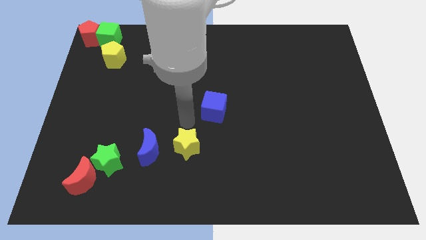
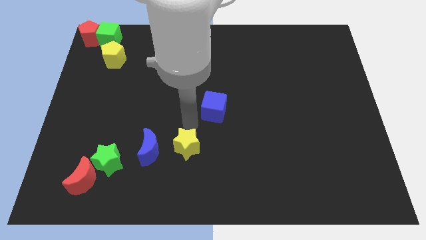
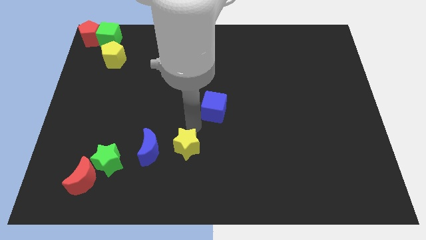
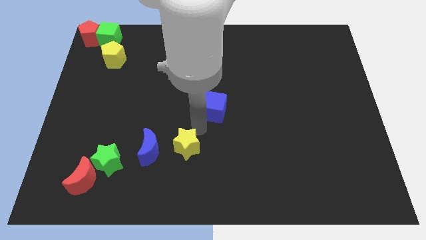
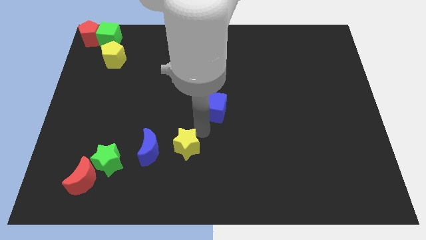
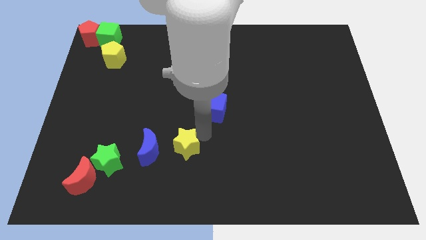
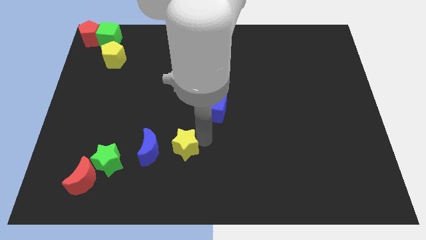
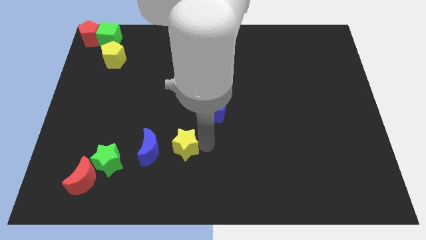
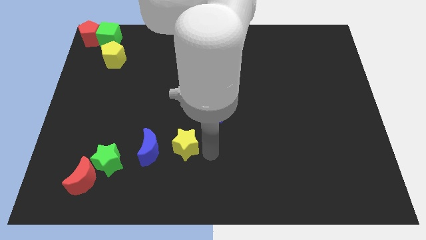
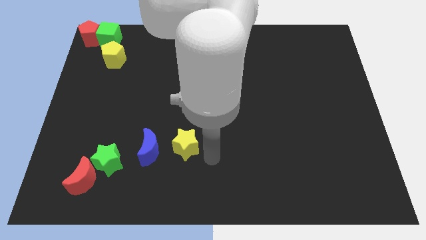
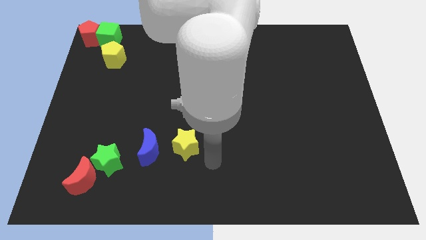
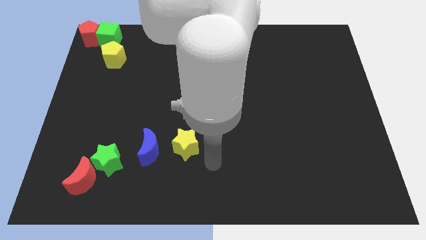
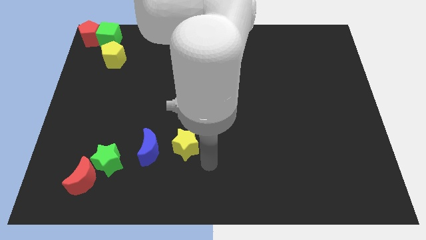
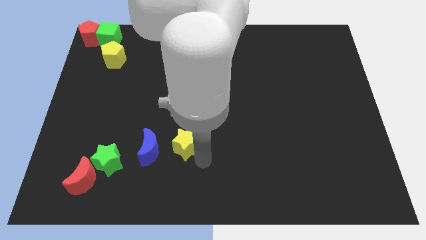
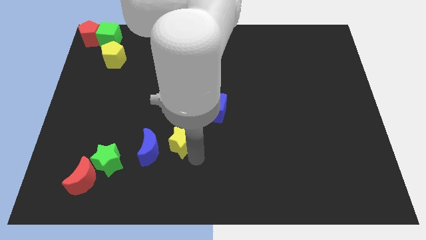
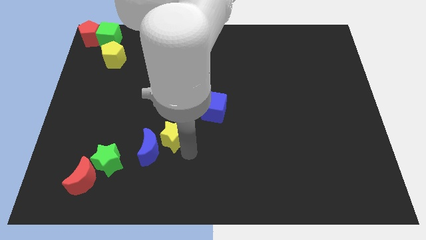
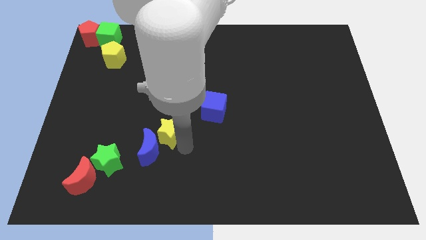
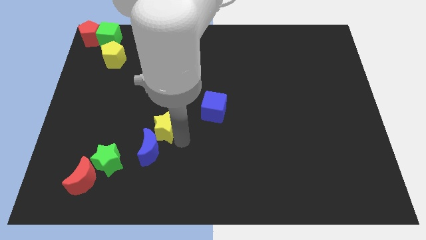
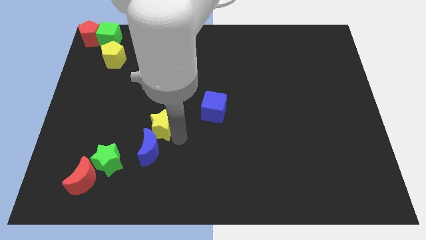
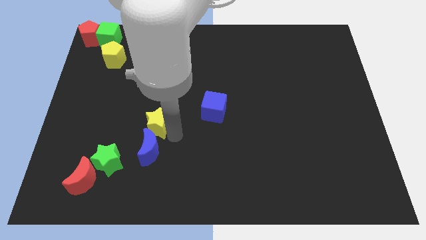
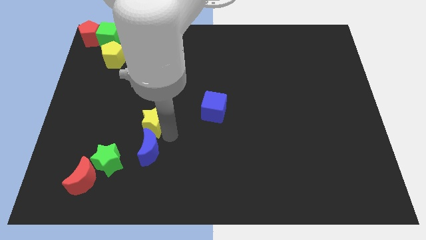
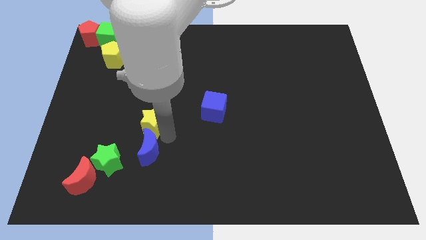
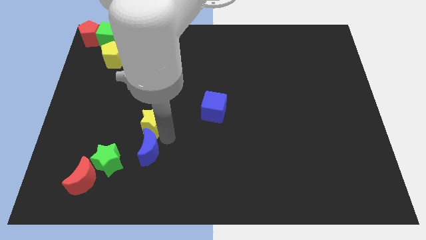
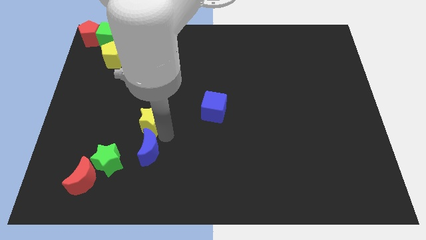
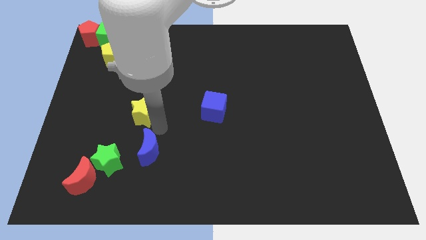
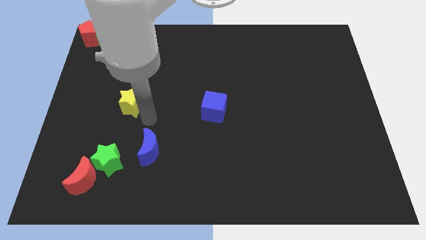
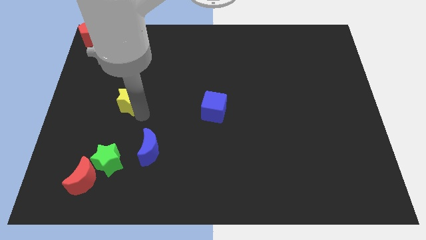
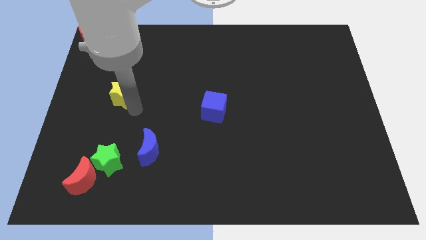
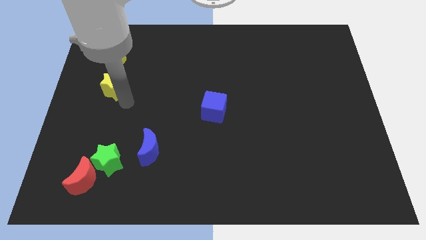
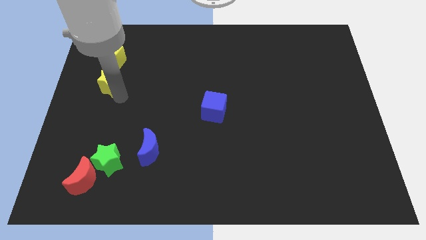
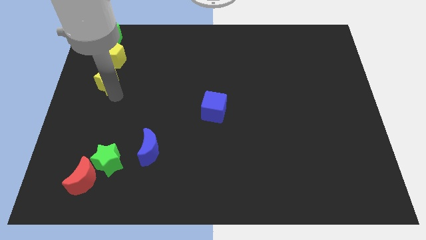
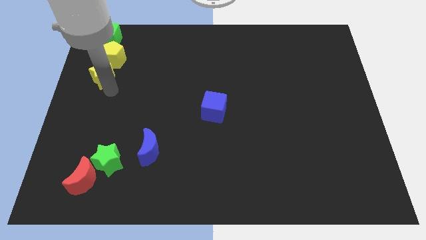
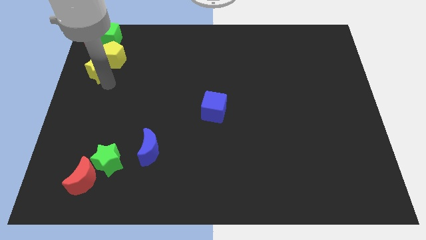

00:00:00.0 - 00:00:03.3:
move yellow star below yellow pentagon

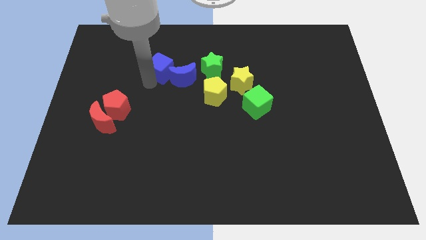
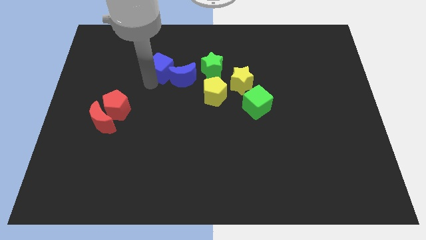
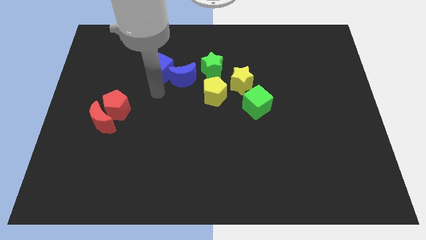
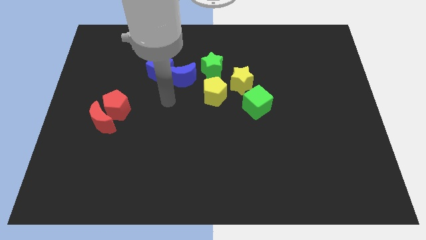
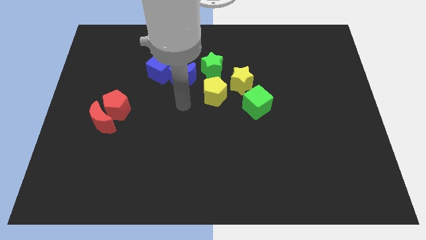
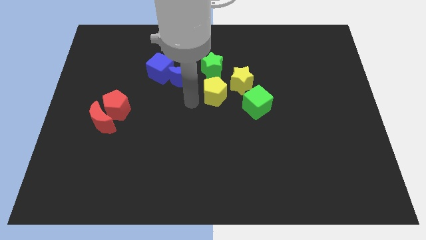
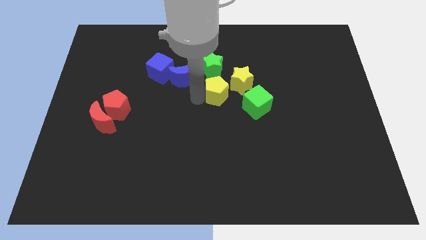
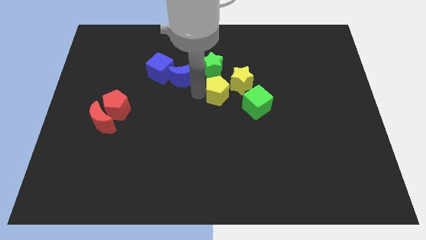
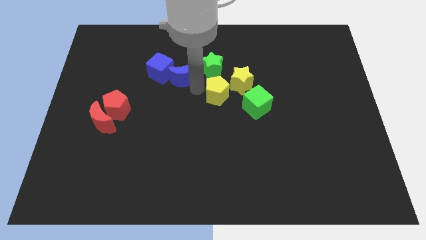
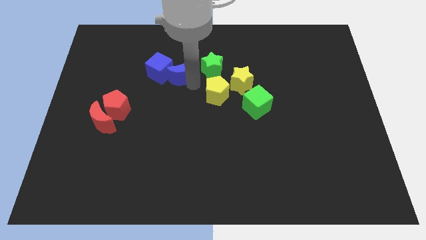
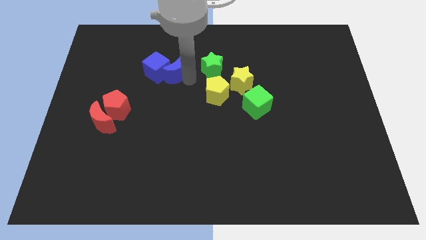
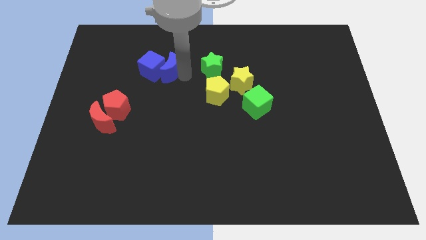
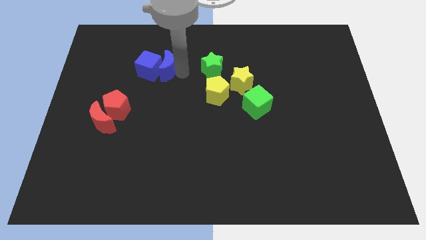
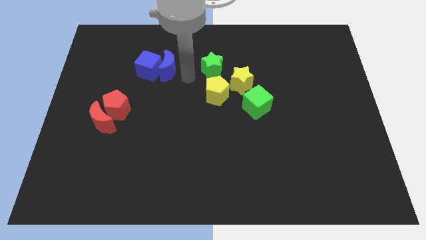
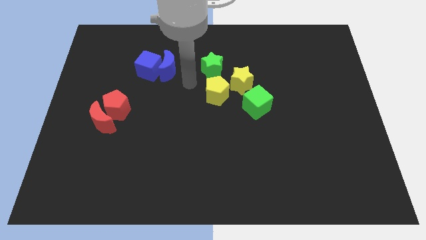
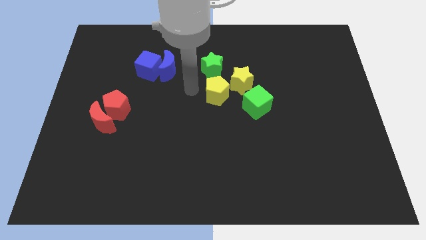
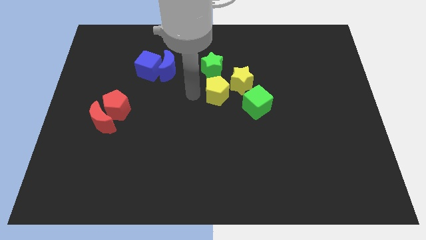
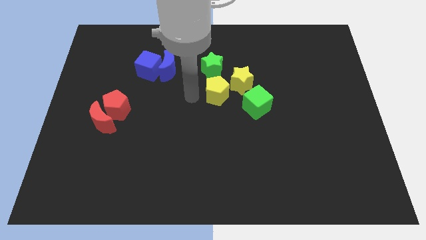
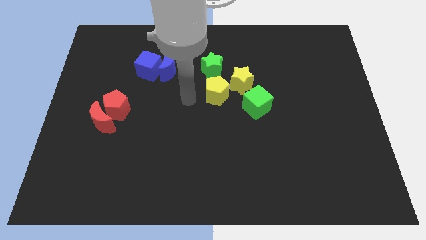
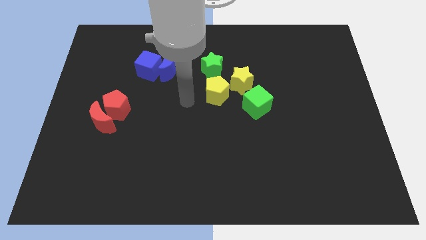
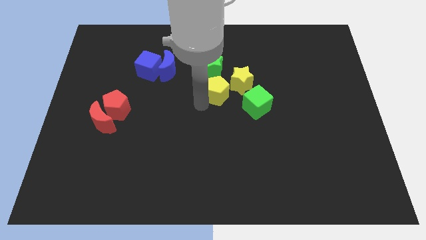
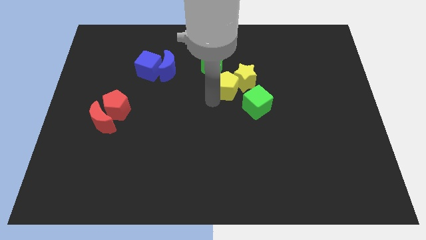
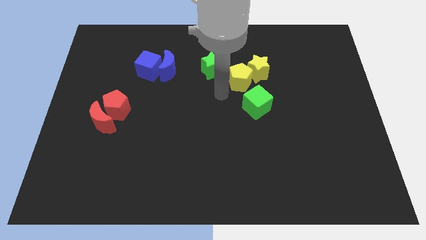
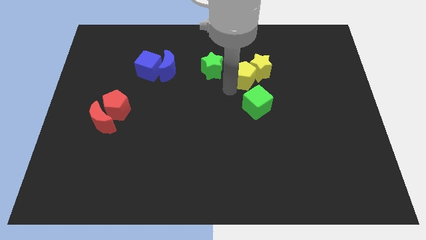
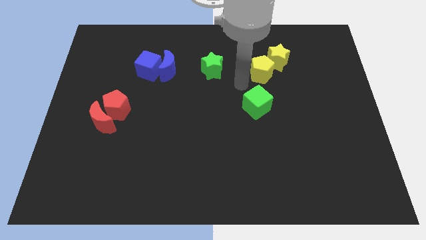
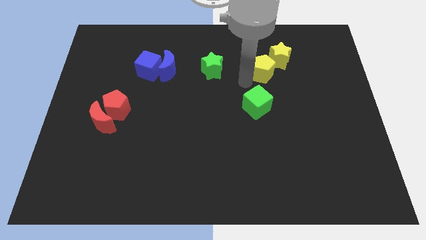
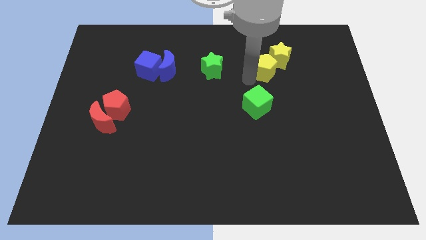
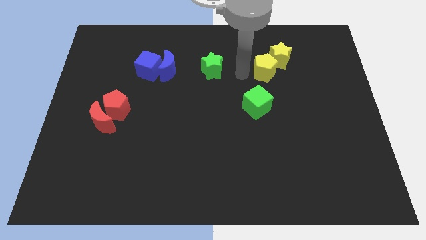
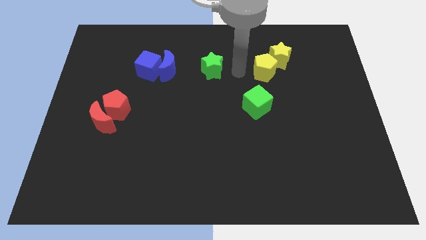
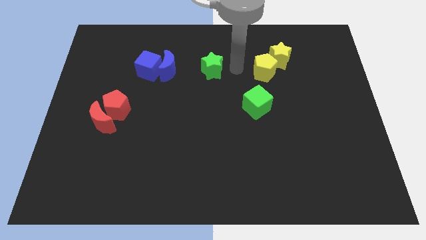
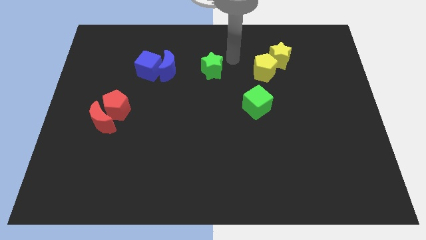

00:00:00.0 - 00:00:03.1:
push the yellow blocks diagonally up

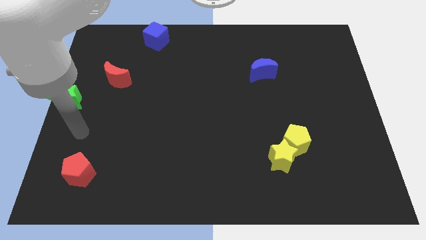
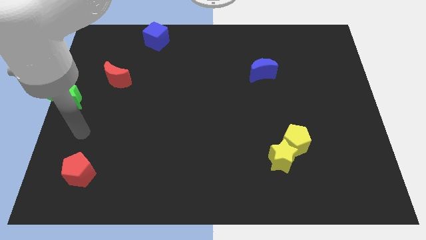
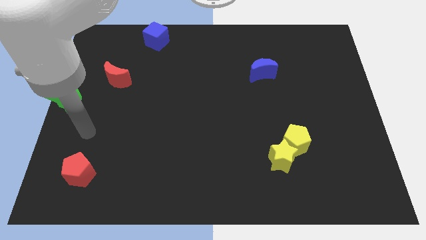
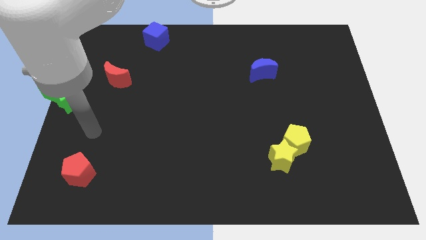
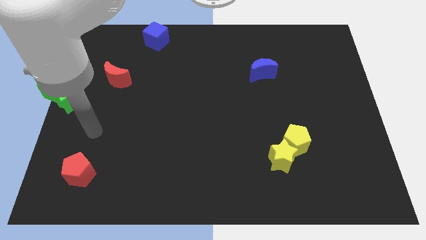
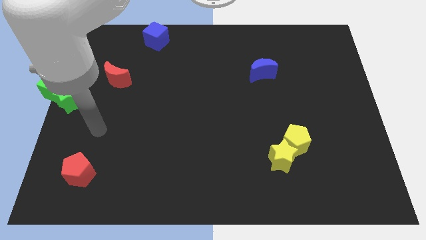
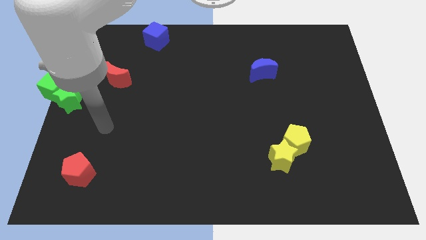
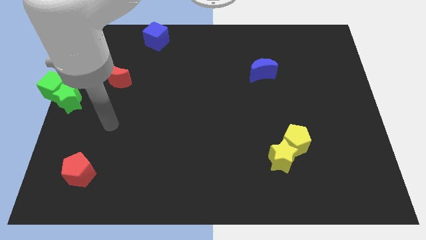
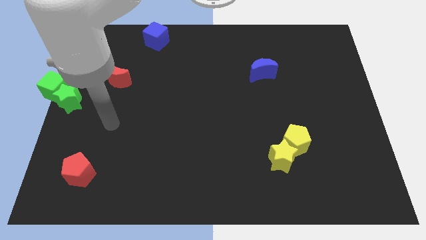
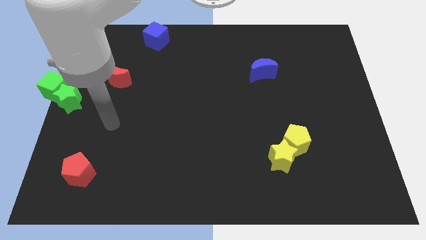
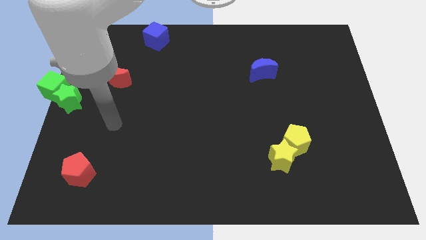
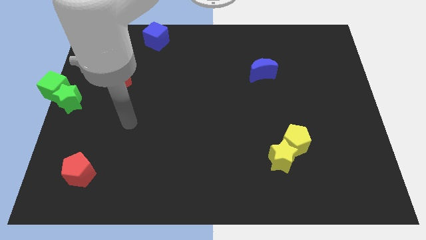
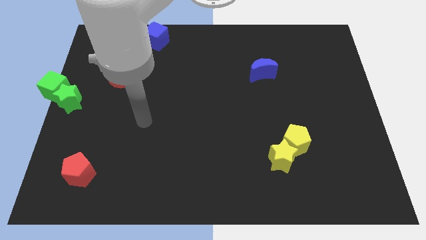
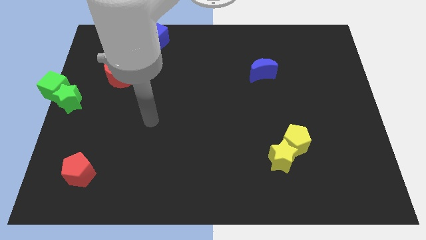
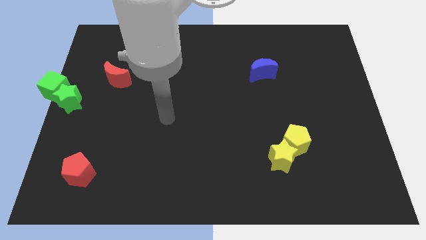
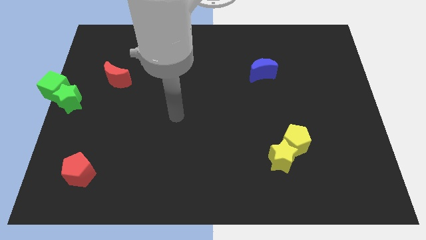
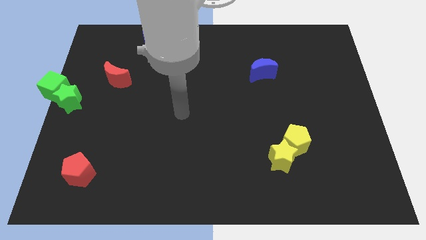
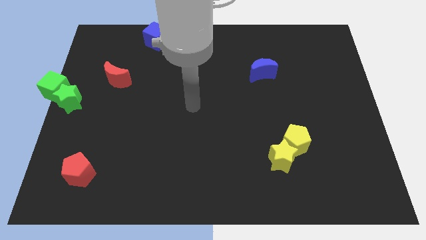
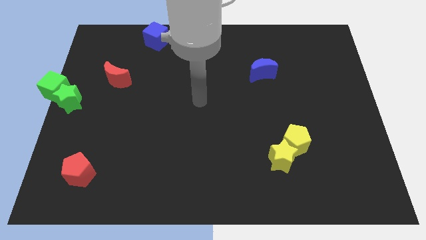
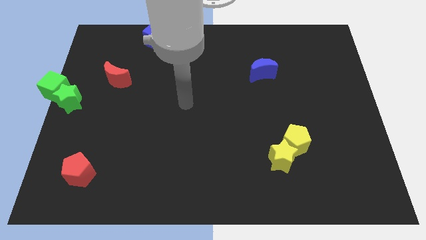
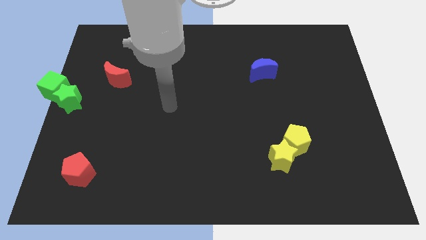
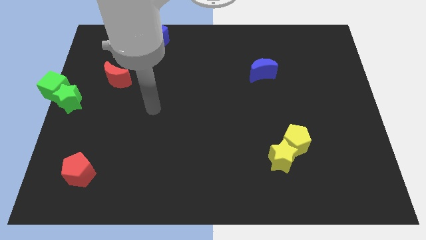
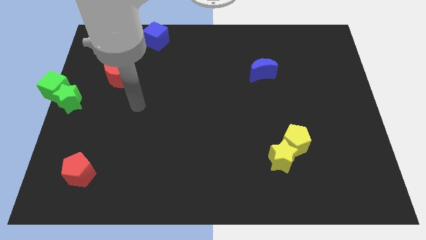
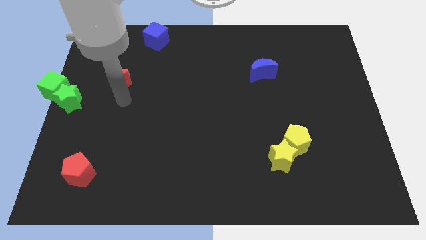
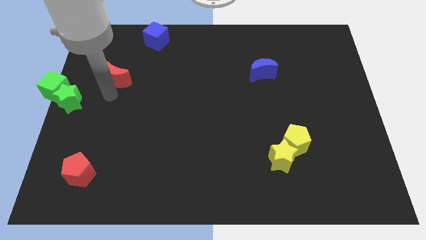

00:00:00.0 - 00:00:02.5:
place your arm to the bottom of red moon
